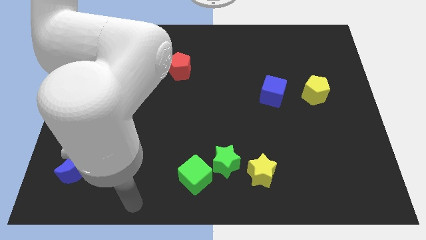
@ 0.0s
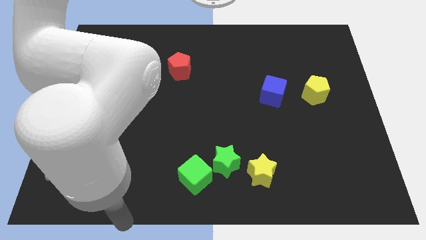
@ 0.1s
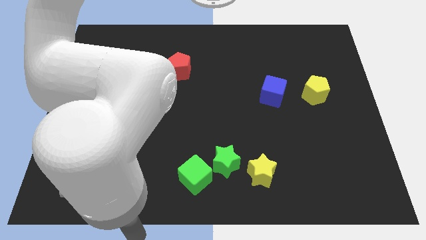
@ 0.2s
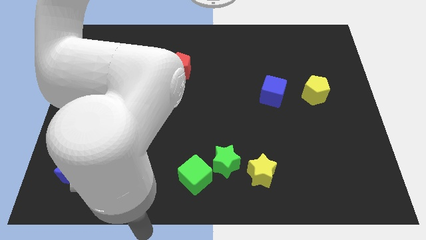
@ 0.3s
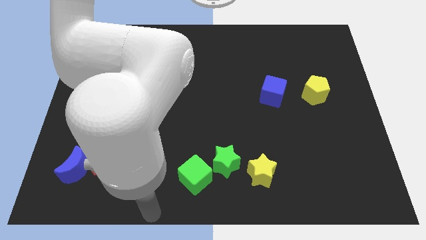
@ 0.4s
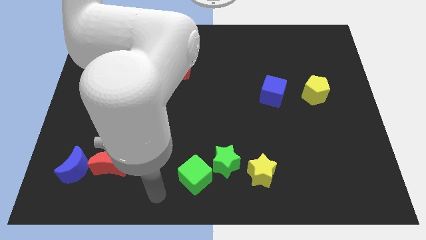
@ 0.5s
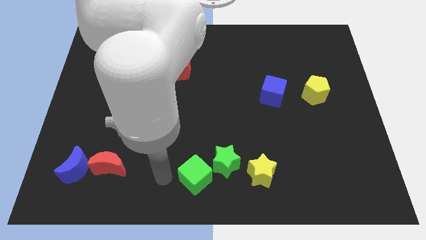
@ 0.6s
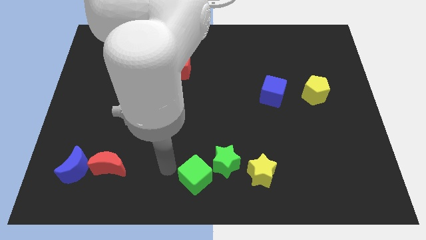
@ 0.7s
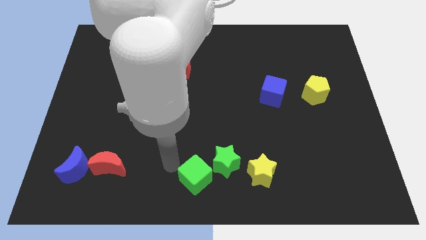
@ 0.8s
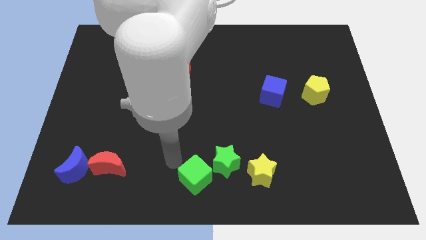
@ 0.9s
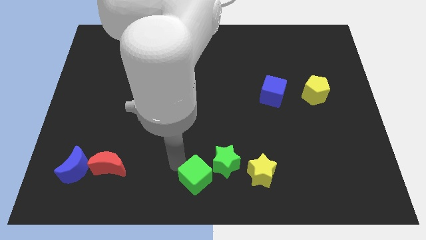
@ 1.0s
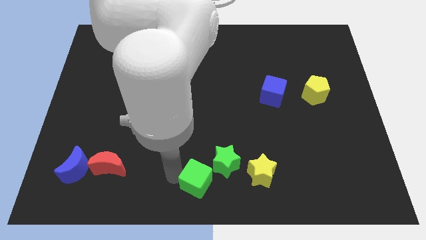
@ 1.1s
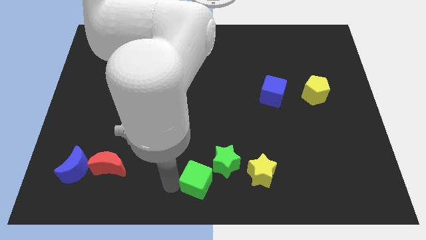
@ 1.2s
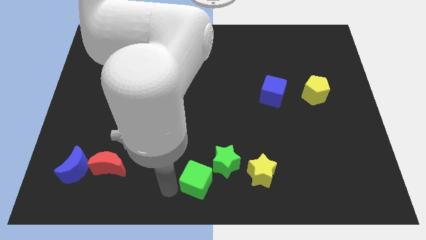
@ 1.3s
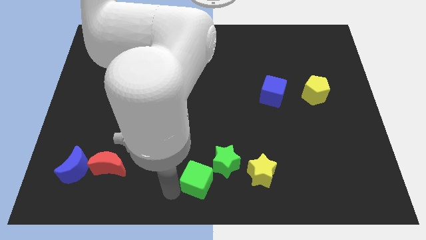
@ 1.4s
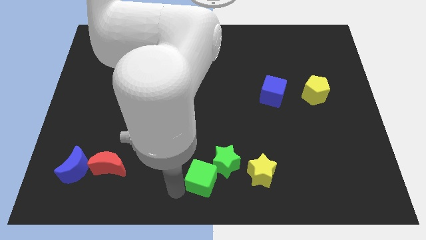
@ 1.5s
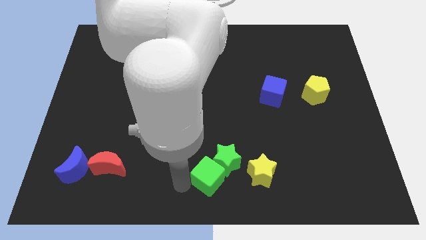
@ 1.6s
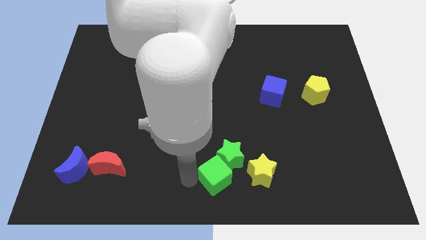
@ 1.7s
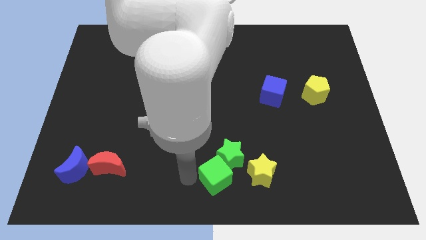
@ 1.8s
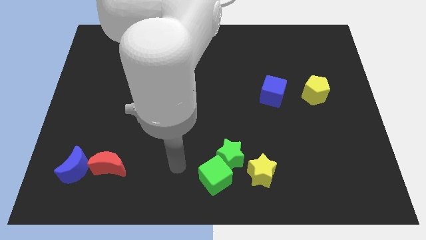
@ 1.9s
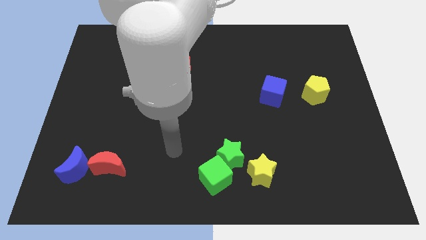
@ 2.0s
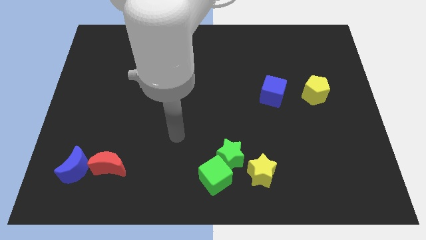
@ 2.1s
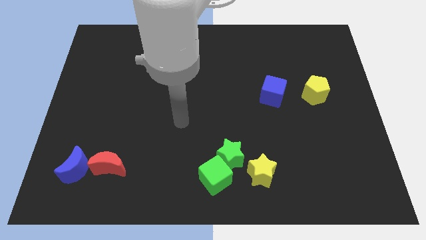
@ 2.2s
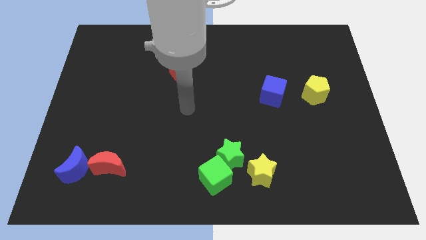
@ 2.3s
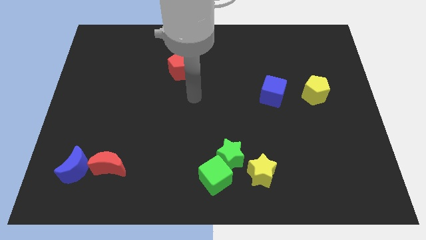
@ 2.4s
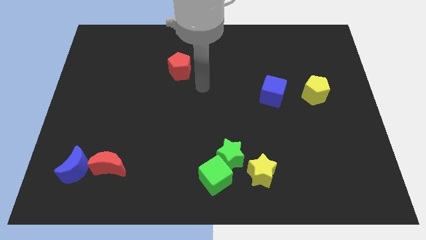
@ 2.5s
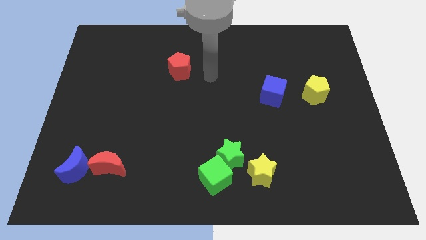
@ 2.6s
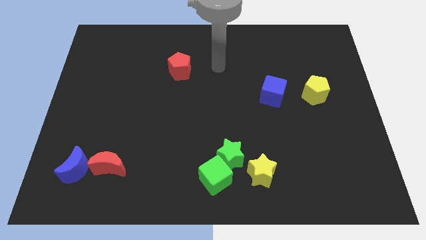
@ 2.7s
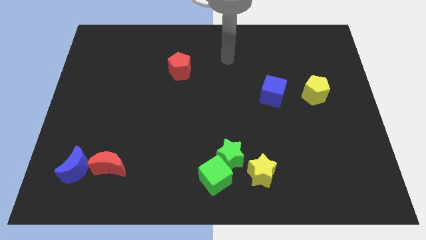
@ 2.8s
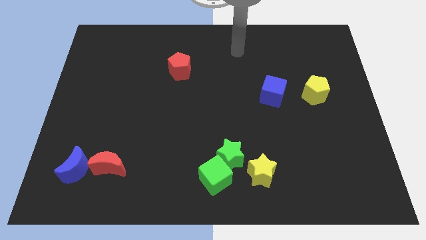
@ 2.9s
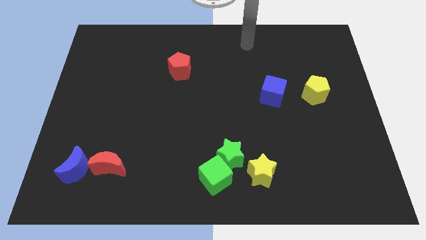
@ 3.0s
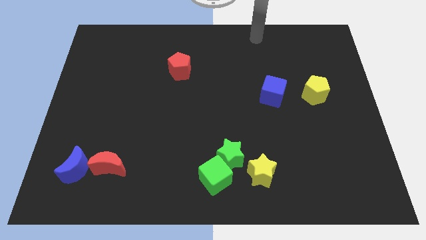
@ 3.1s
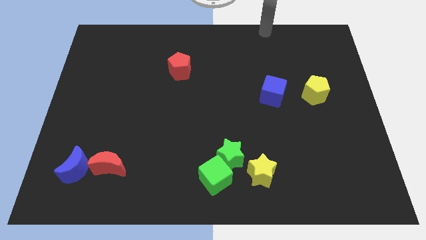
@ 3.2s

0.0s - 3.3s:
place the green blocks to the left of yellow star and move away

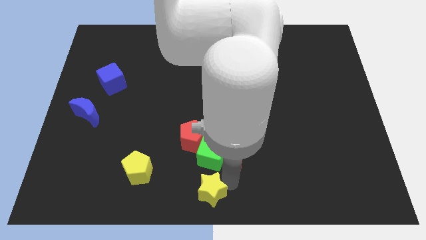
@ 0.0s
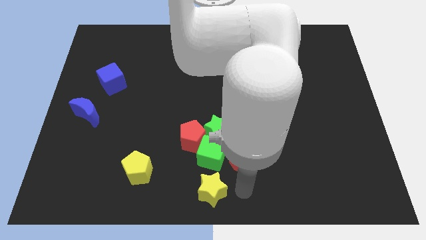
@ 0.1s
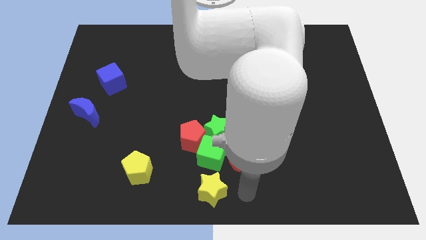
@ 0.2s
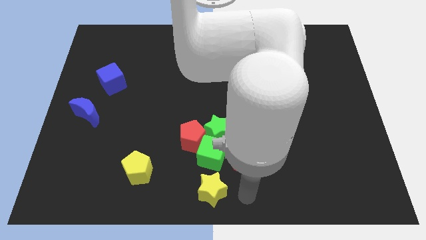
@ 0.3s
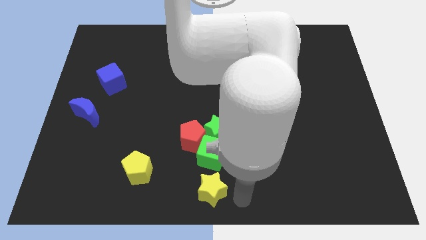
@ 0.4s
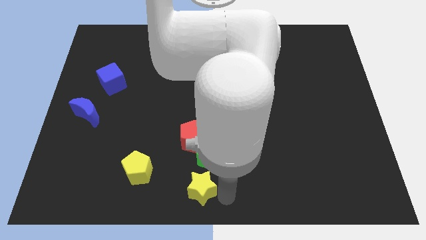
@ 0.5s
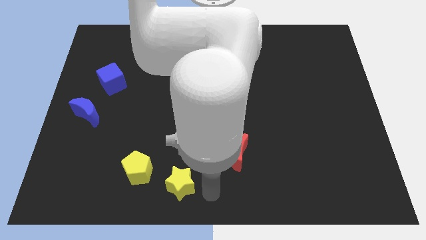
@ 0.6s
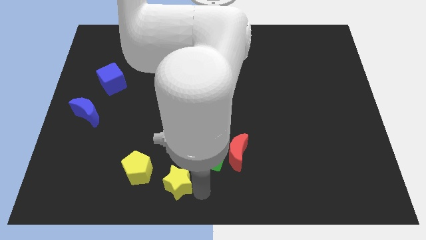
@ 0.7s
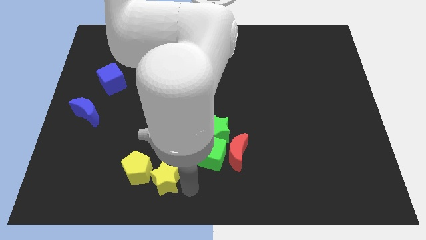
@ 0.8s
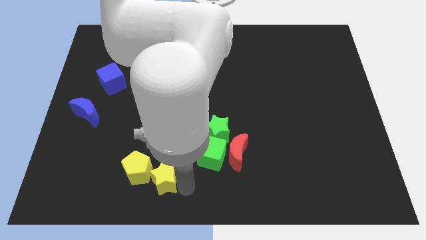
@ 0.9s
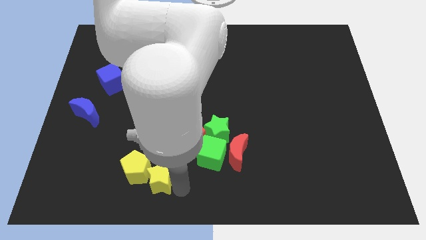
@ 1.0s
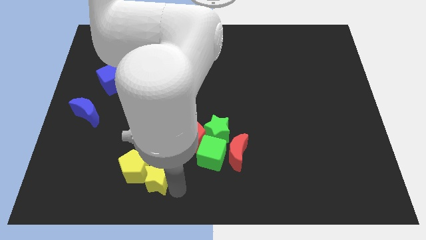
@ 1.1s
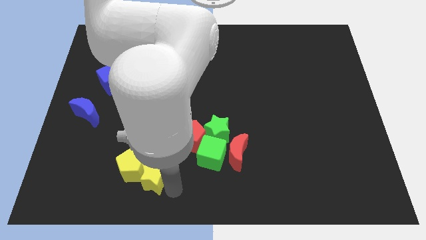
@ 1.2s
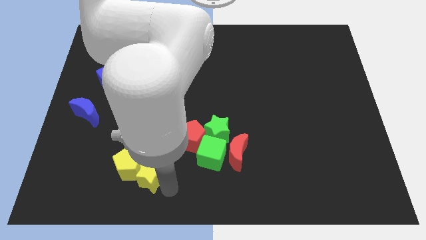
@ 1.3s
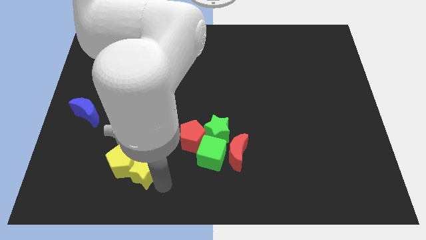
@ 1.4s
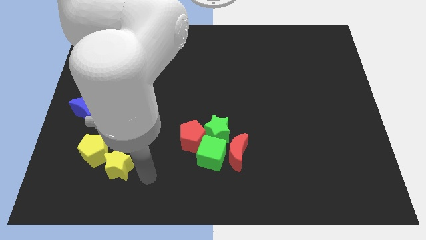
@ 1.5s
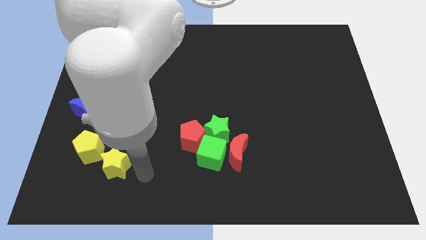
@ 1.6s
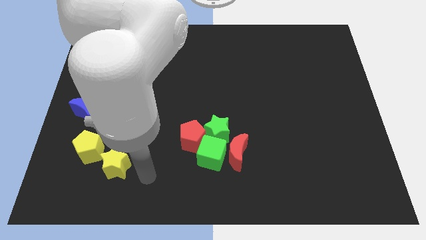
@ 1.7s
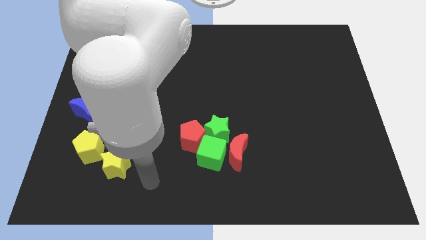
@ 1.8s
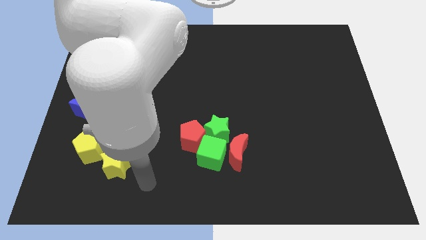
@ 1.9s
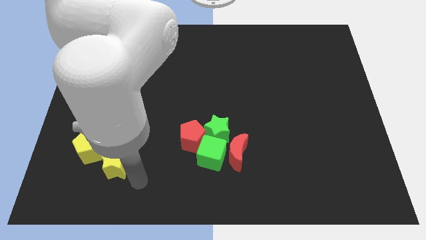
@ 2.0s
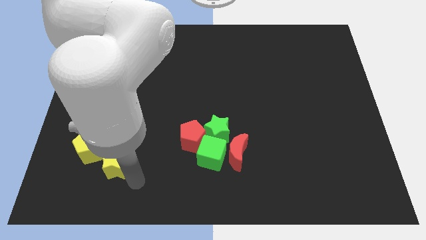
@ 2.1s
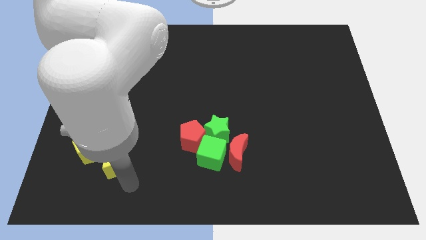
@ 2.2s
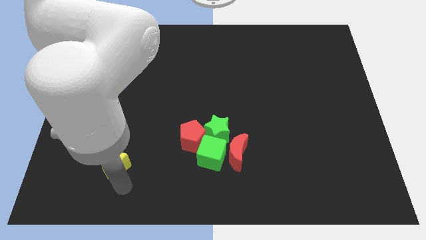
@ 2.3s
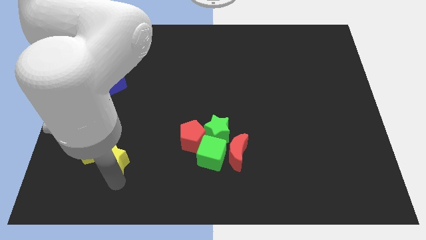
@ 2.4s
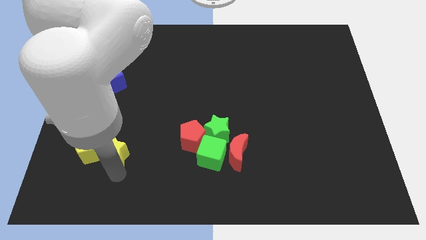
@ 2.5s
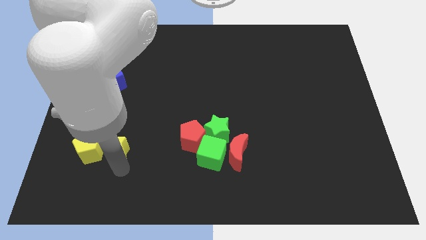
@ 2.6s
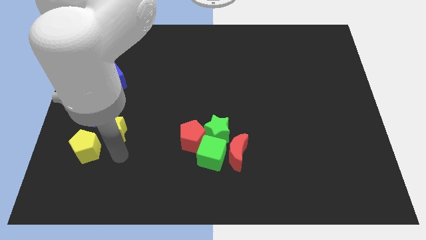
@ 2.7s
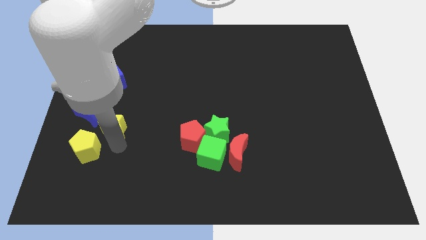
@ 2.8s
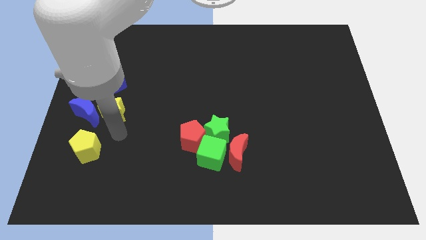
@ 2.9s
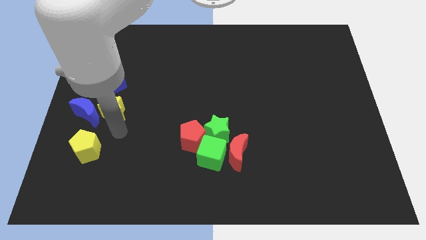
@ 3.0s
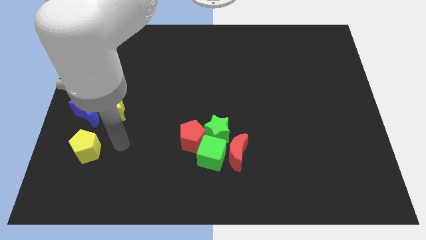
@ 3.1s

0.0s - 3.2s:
push the yellow star and yellow pentagon to the left side of the board

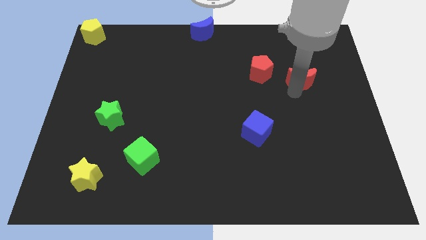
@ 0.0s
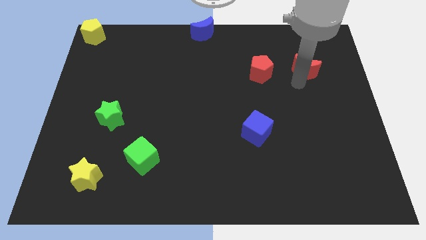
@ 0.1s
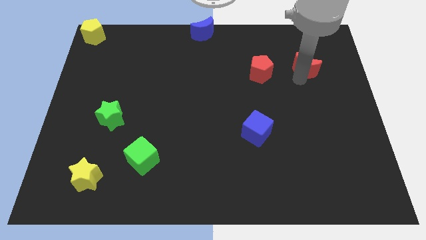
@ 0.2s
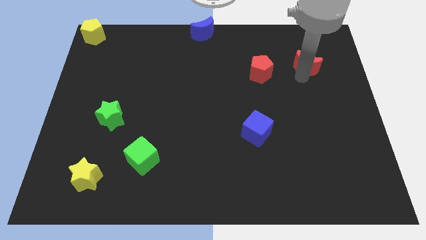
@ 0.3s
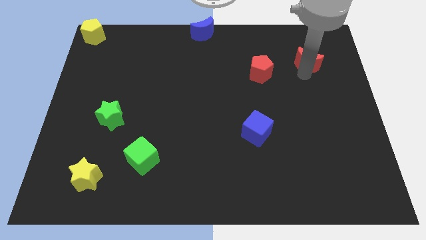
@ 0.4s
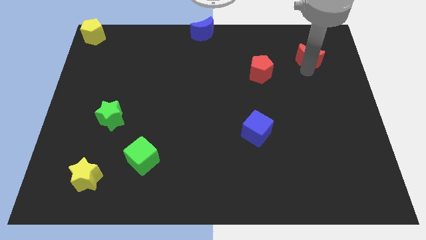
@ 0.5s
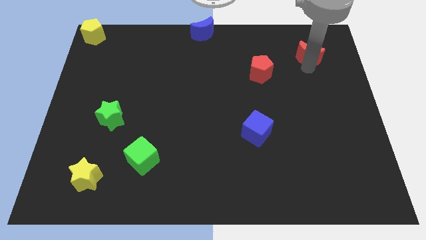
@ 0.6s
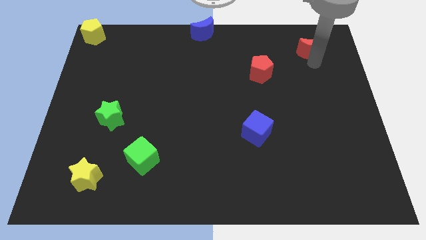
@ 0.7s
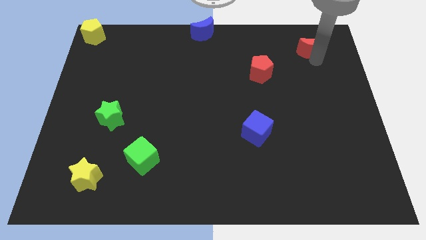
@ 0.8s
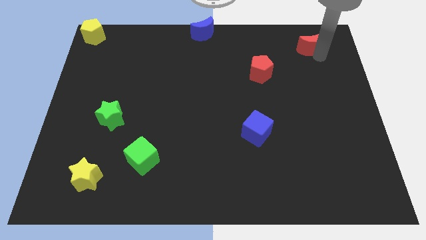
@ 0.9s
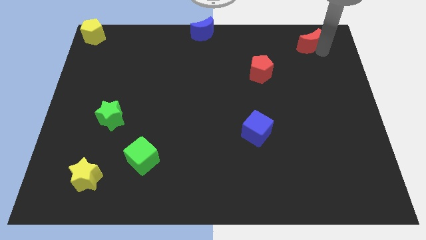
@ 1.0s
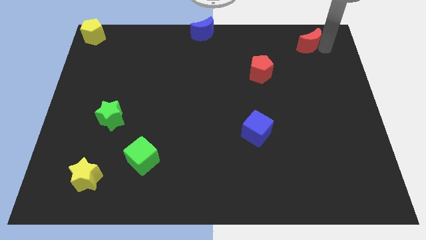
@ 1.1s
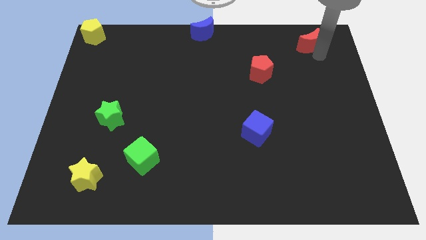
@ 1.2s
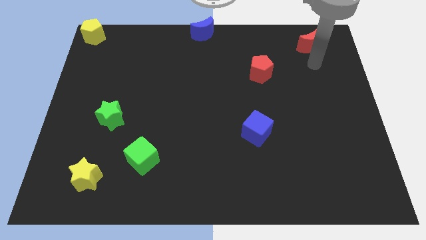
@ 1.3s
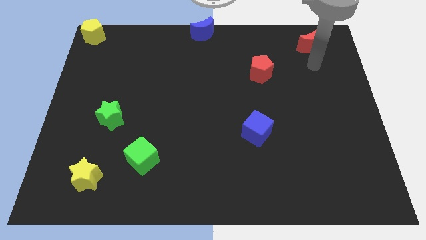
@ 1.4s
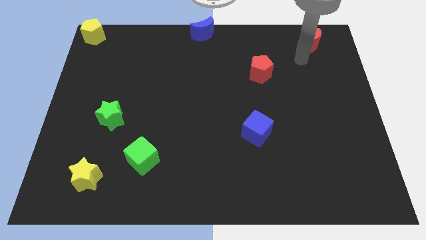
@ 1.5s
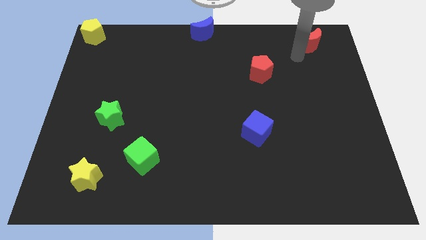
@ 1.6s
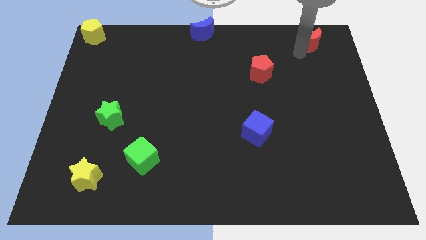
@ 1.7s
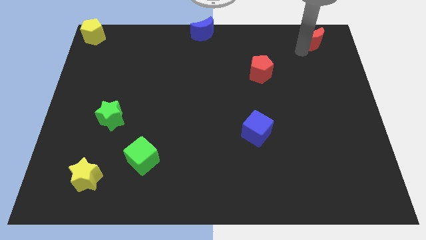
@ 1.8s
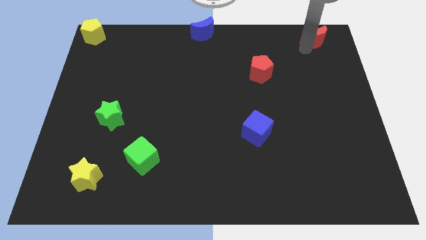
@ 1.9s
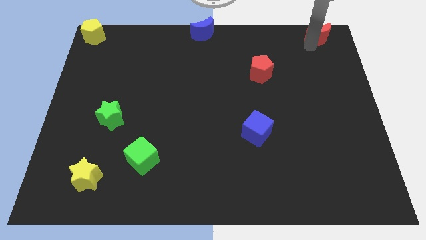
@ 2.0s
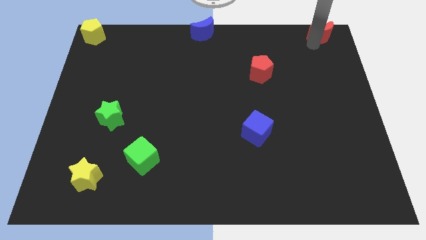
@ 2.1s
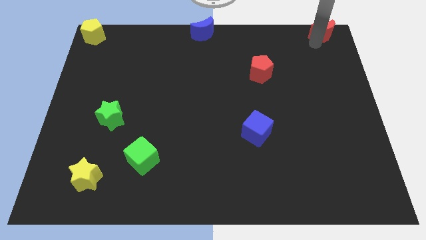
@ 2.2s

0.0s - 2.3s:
move red moon to the top right

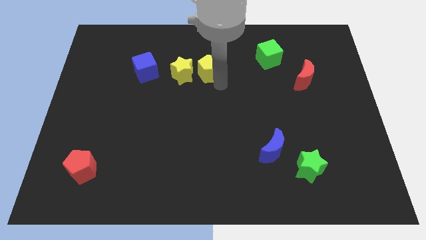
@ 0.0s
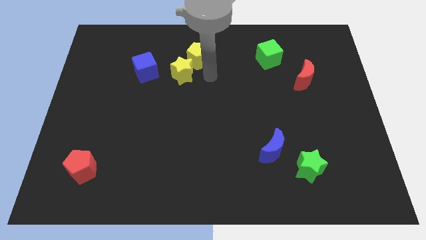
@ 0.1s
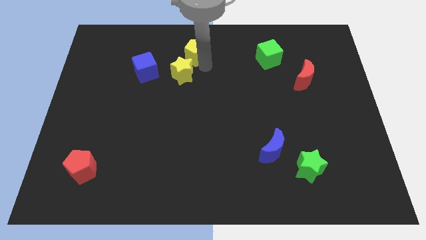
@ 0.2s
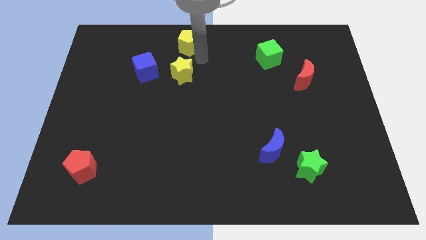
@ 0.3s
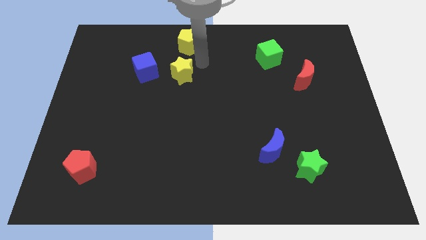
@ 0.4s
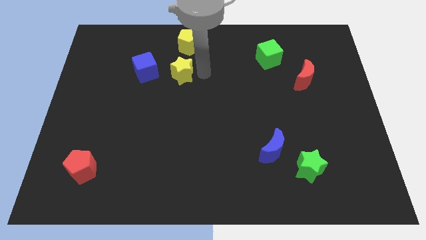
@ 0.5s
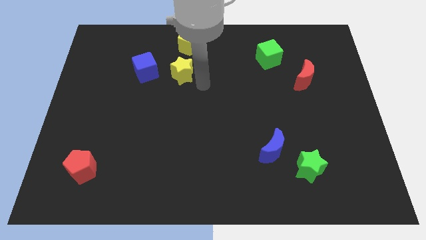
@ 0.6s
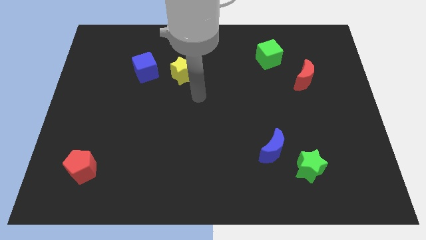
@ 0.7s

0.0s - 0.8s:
place yellow pentagon to the top of yellow star
